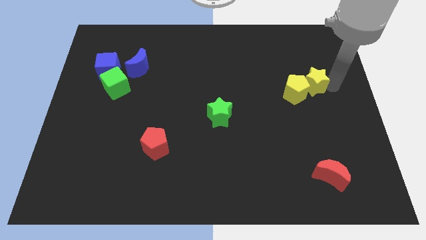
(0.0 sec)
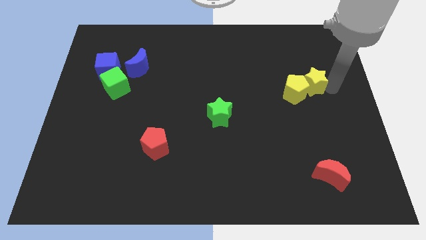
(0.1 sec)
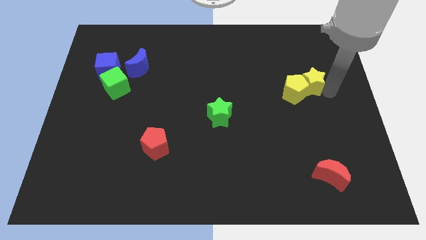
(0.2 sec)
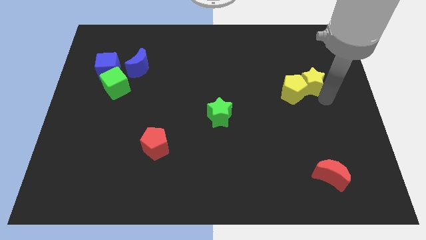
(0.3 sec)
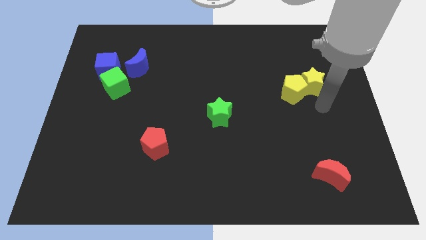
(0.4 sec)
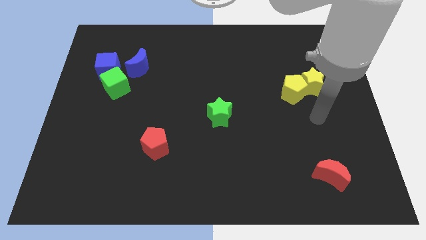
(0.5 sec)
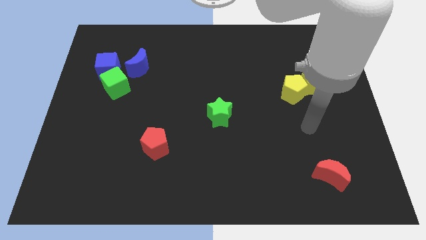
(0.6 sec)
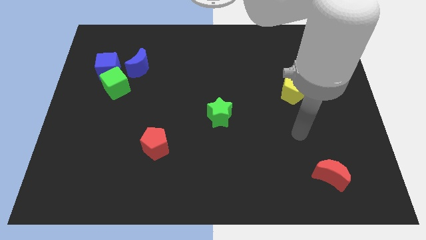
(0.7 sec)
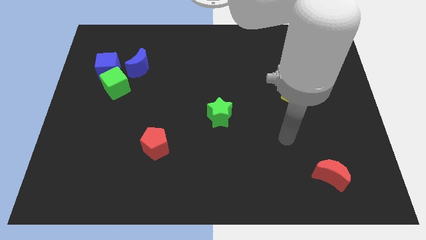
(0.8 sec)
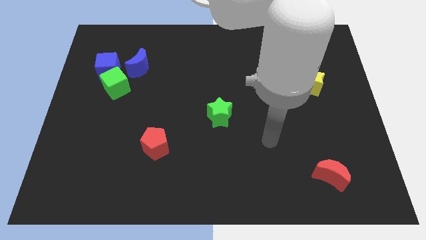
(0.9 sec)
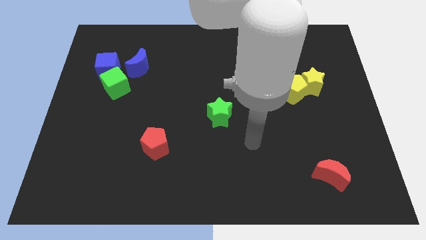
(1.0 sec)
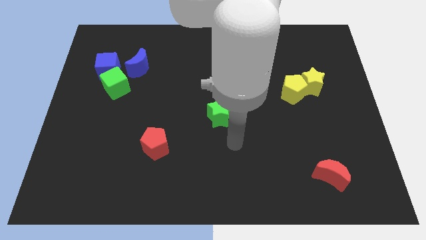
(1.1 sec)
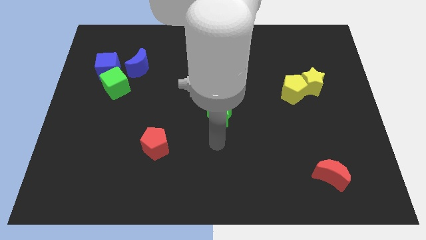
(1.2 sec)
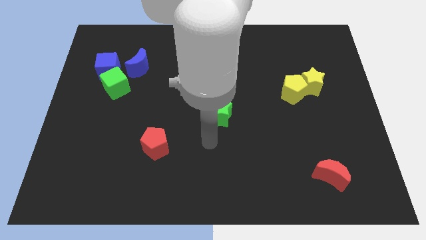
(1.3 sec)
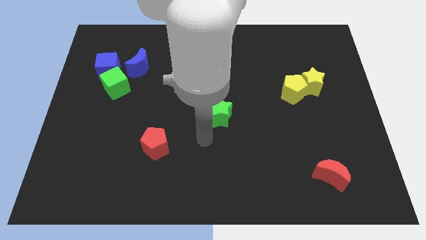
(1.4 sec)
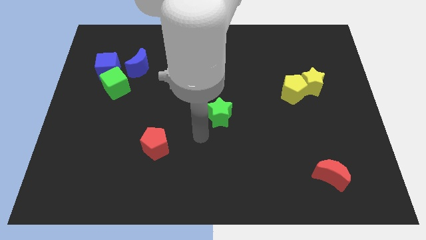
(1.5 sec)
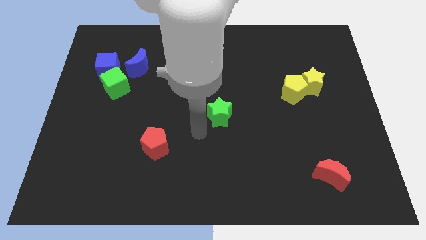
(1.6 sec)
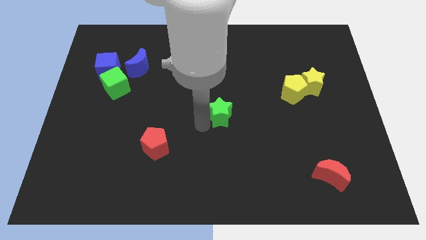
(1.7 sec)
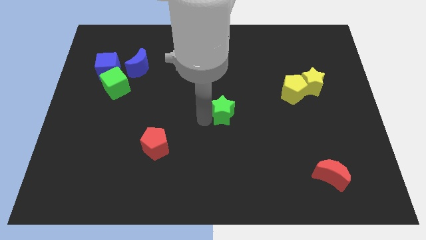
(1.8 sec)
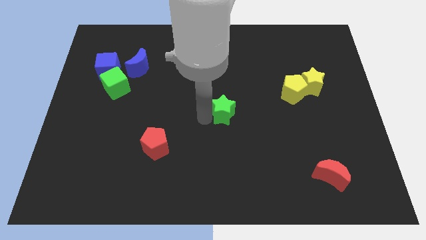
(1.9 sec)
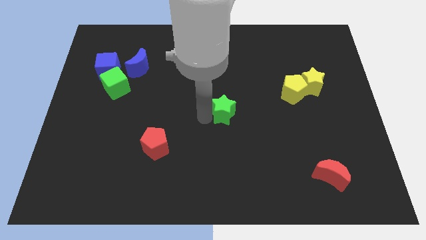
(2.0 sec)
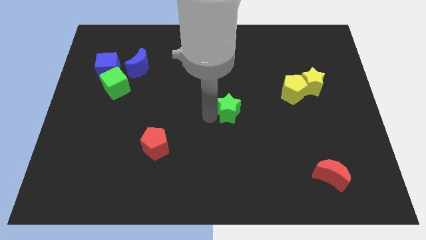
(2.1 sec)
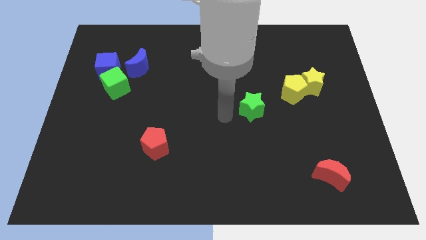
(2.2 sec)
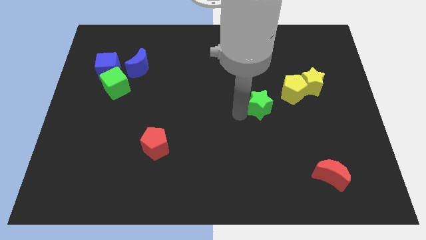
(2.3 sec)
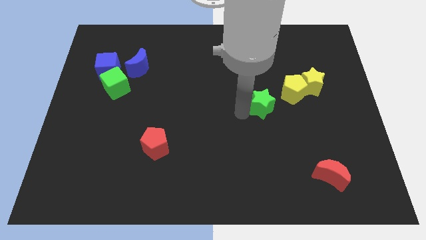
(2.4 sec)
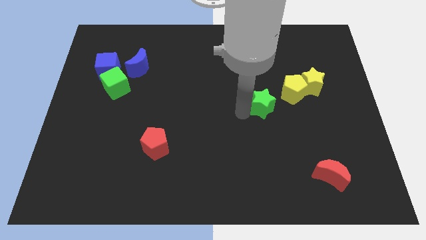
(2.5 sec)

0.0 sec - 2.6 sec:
place the green star diagonally top right to the red pentagon

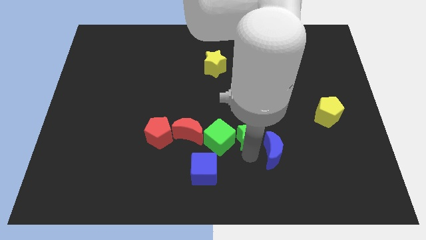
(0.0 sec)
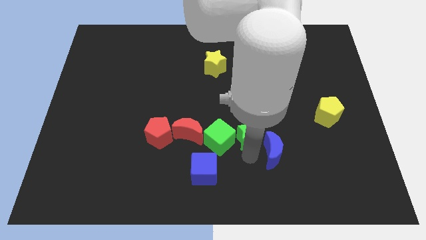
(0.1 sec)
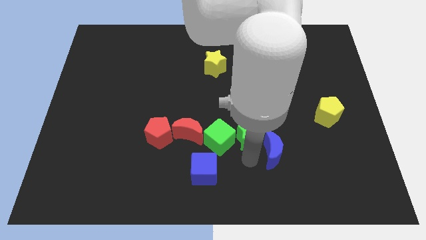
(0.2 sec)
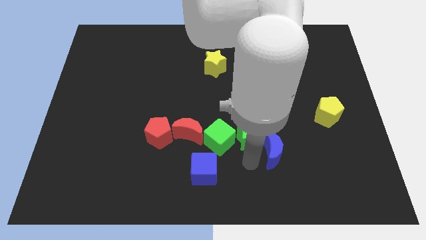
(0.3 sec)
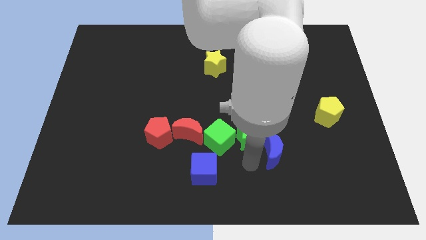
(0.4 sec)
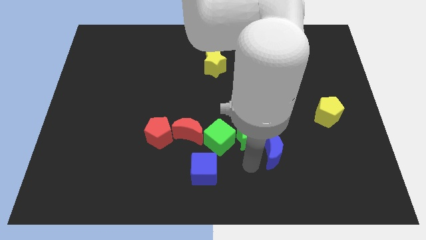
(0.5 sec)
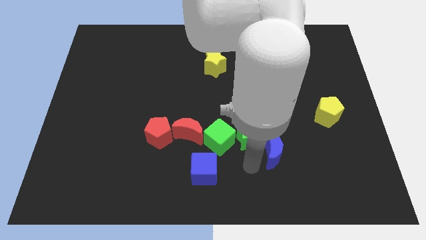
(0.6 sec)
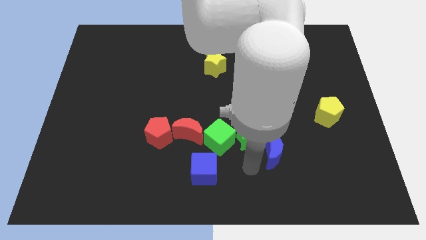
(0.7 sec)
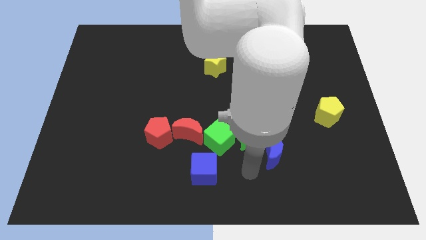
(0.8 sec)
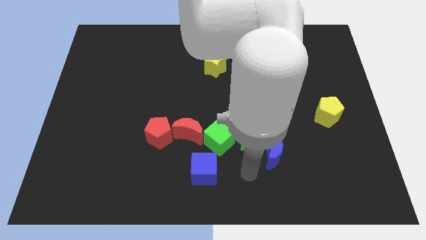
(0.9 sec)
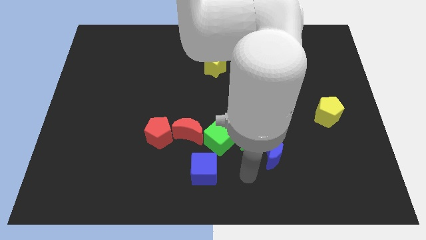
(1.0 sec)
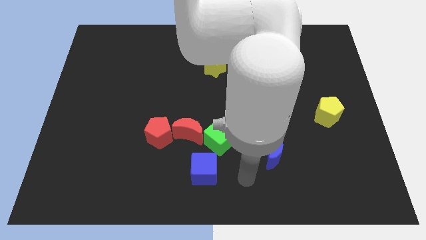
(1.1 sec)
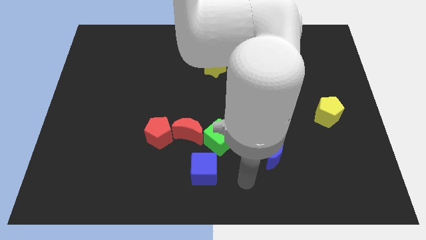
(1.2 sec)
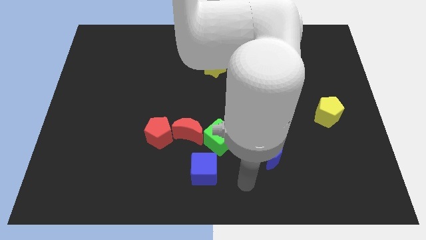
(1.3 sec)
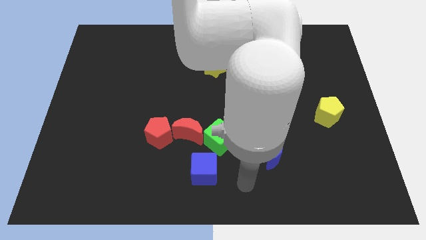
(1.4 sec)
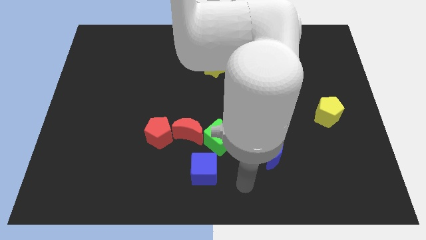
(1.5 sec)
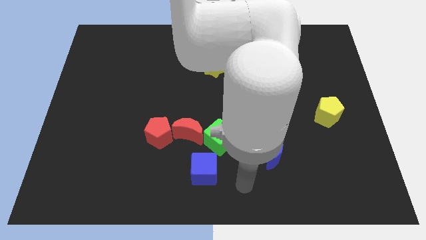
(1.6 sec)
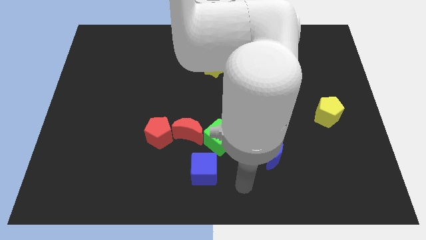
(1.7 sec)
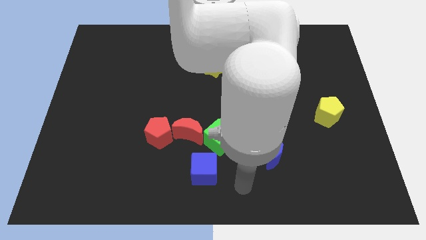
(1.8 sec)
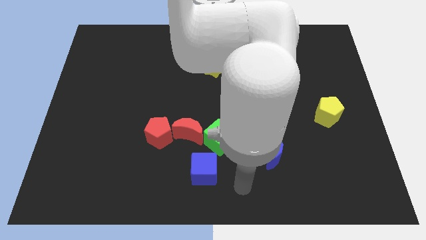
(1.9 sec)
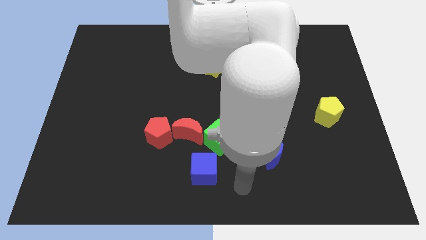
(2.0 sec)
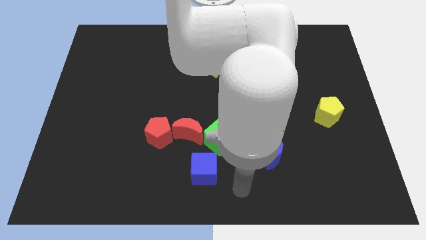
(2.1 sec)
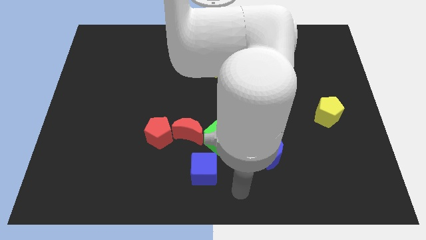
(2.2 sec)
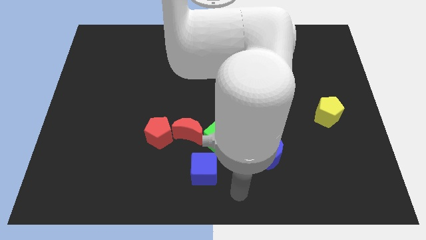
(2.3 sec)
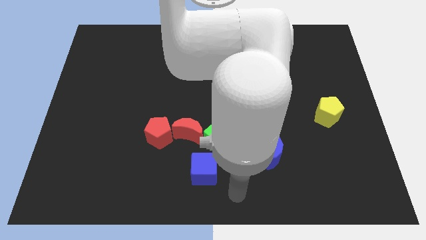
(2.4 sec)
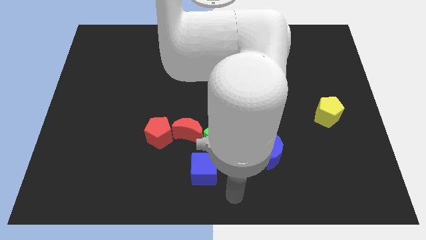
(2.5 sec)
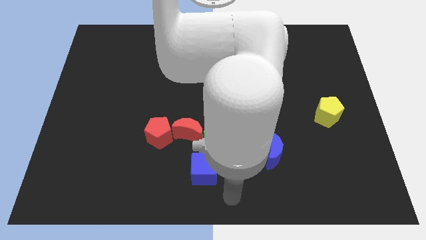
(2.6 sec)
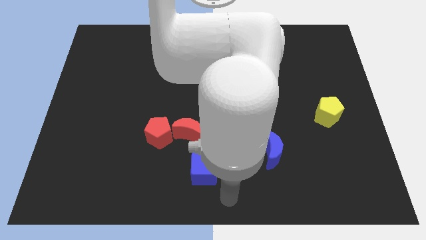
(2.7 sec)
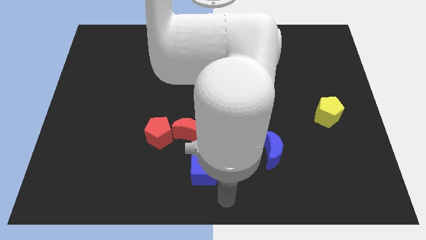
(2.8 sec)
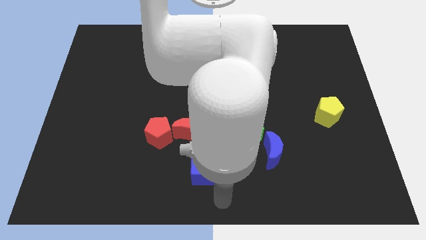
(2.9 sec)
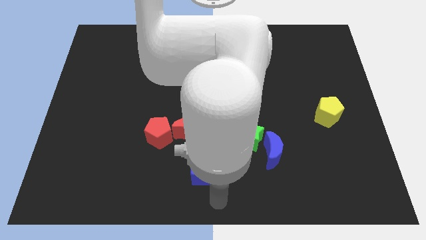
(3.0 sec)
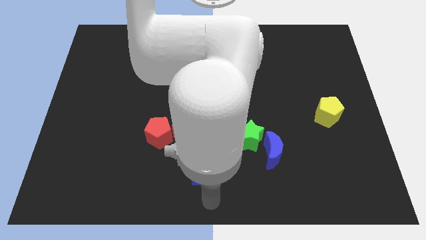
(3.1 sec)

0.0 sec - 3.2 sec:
move the arm to the bottom of the blue cube

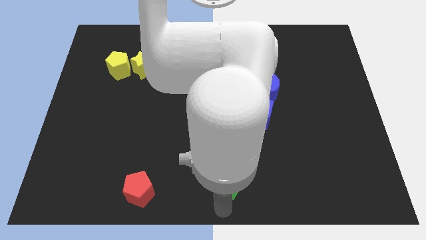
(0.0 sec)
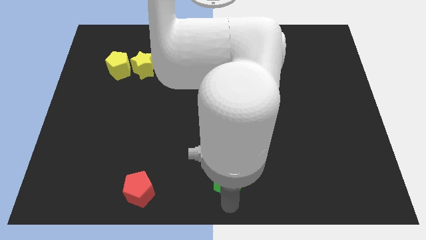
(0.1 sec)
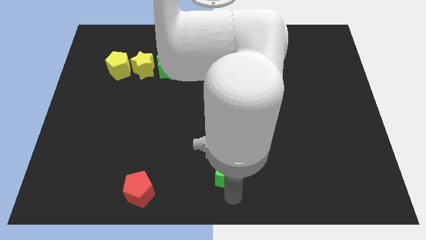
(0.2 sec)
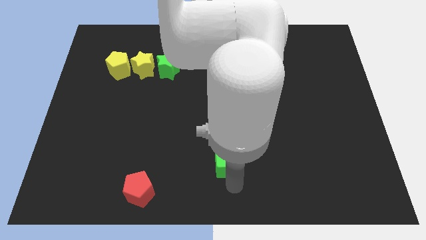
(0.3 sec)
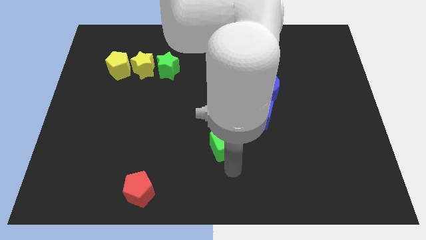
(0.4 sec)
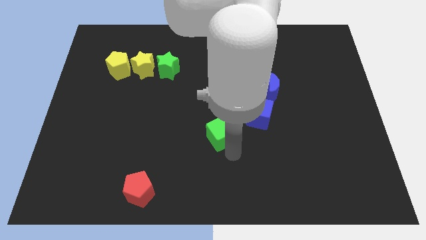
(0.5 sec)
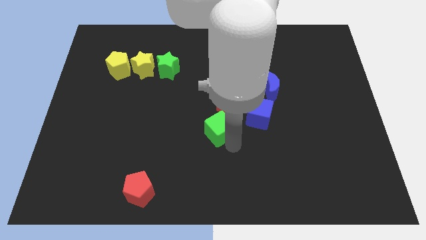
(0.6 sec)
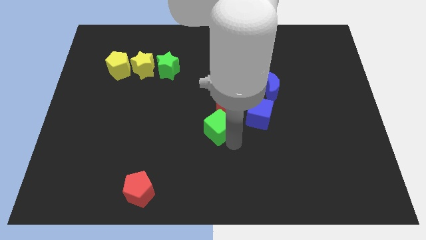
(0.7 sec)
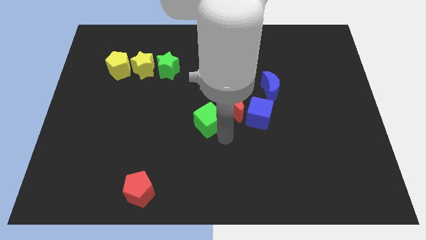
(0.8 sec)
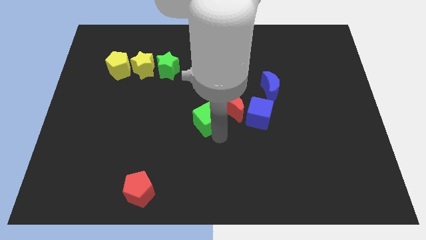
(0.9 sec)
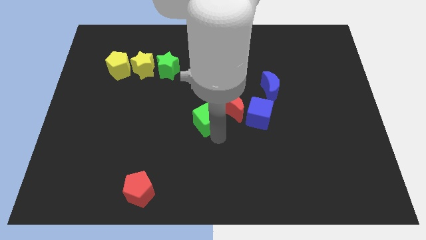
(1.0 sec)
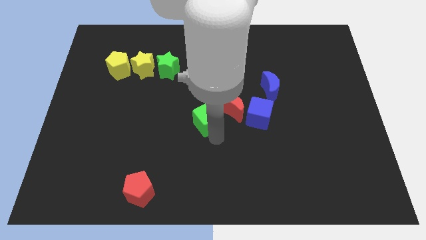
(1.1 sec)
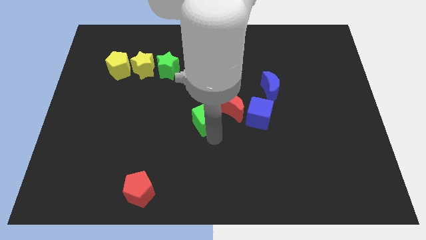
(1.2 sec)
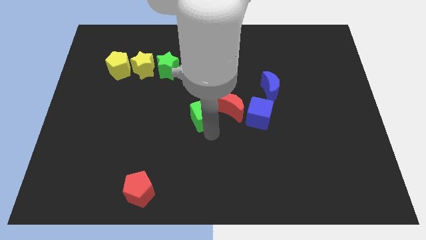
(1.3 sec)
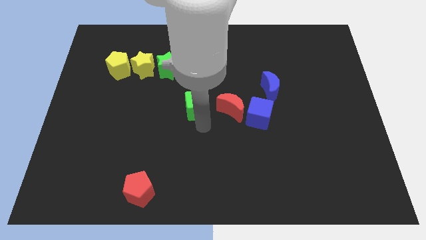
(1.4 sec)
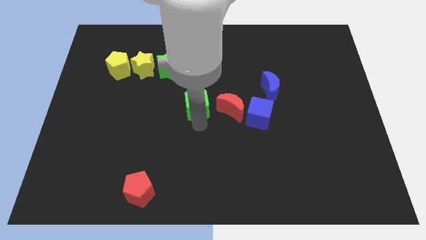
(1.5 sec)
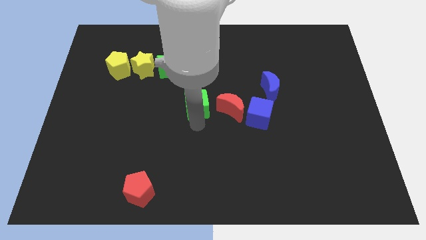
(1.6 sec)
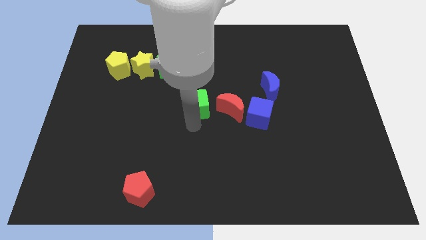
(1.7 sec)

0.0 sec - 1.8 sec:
push the green cube to the left of the red moon

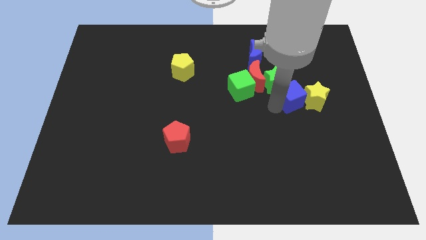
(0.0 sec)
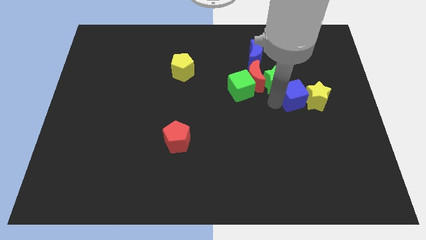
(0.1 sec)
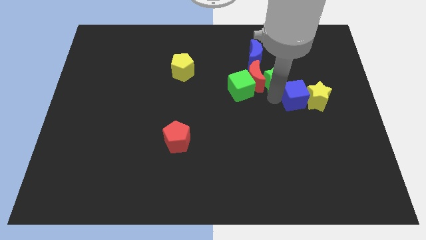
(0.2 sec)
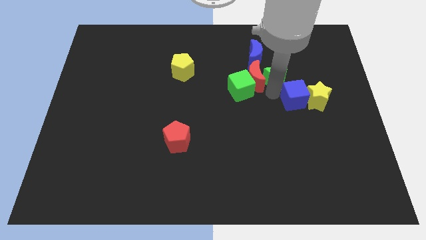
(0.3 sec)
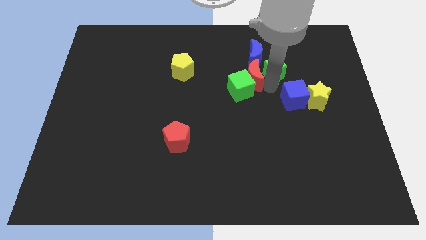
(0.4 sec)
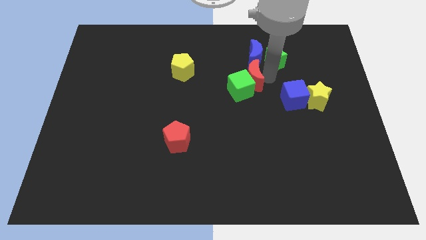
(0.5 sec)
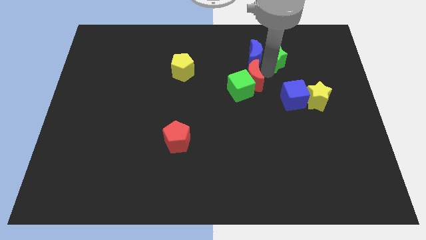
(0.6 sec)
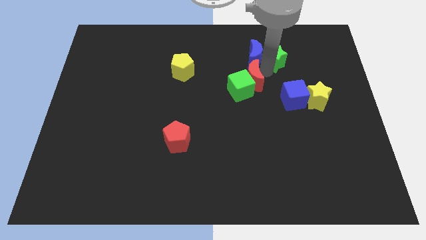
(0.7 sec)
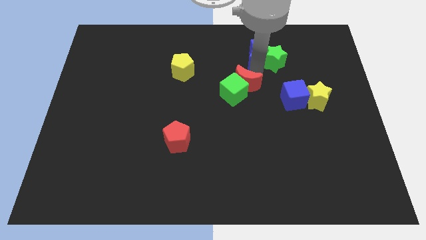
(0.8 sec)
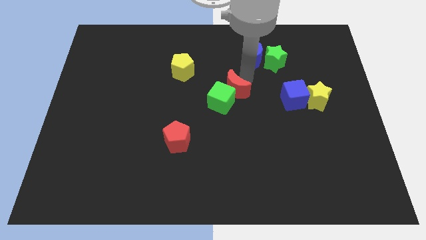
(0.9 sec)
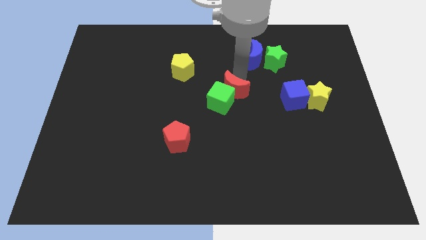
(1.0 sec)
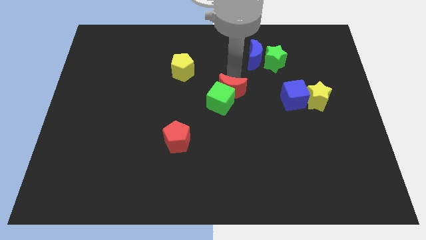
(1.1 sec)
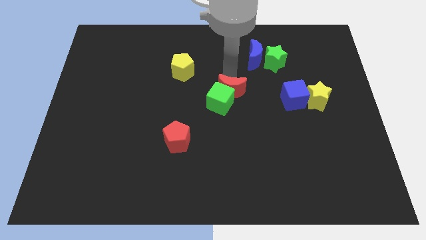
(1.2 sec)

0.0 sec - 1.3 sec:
push the red crescent along with green cube towards the center

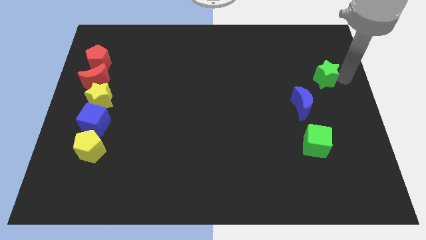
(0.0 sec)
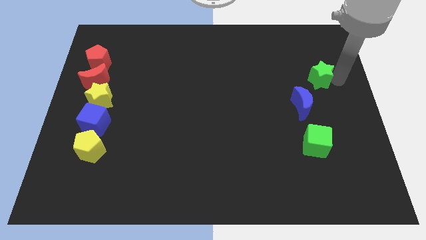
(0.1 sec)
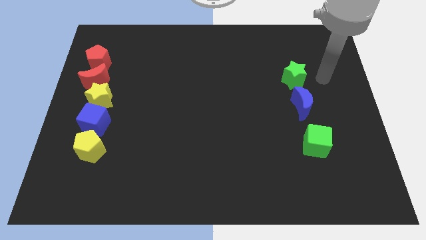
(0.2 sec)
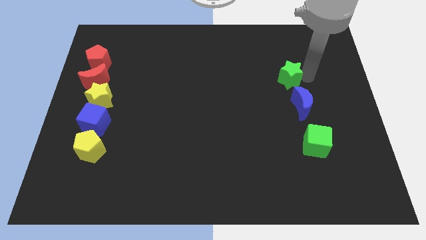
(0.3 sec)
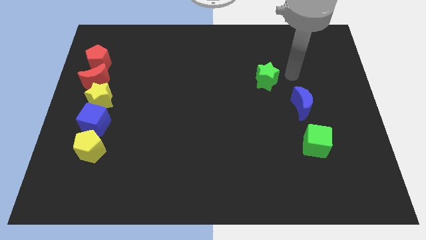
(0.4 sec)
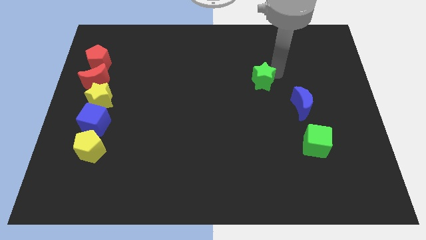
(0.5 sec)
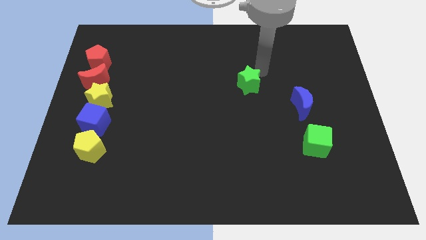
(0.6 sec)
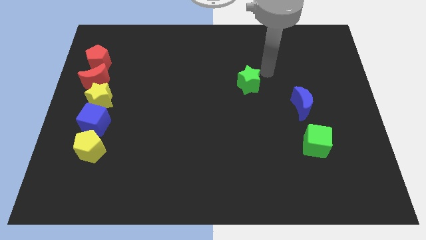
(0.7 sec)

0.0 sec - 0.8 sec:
move the green star to the left of the board
